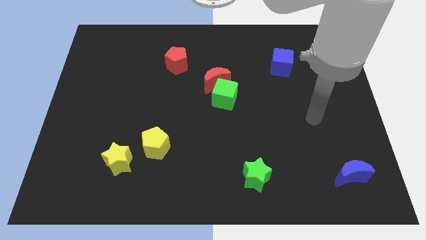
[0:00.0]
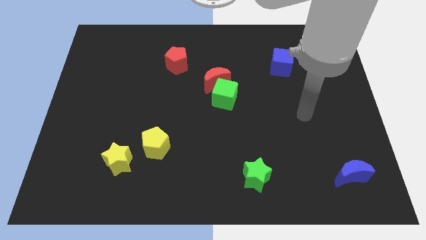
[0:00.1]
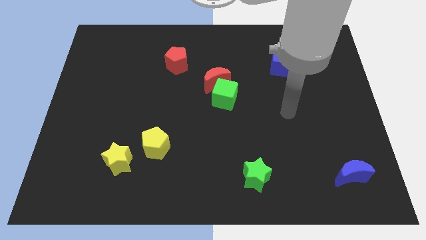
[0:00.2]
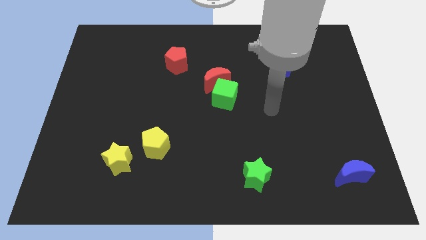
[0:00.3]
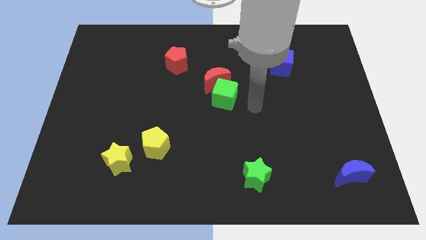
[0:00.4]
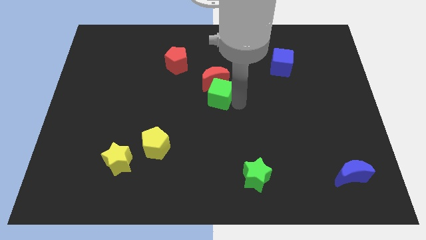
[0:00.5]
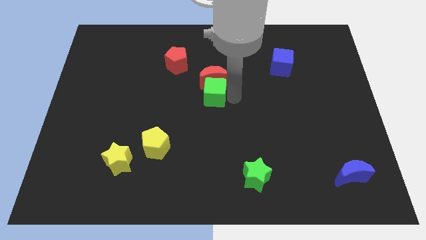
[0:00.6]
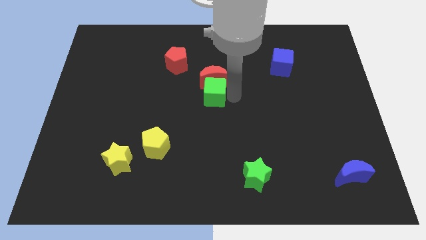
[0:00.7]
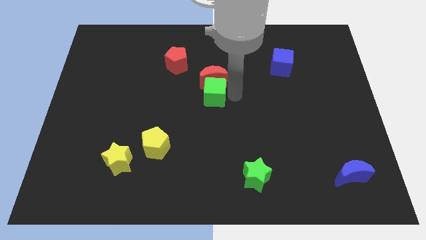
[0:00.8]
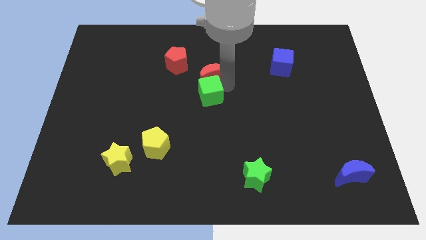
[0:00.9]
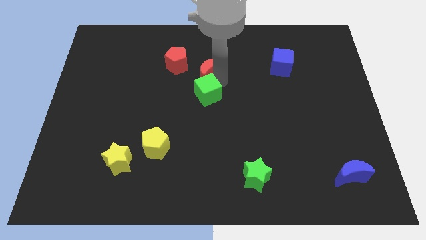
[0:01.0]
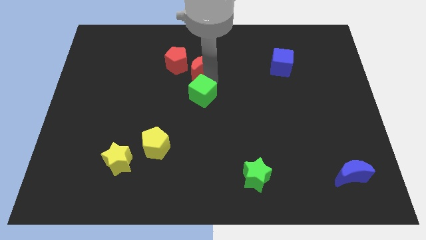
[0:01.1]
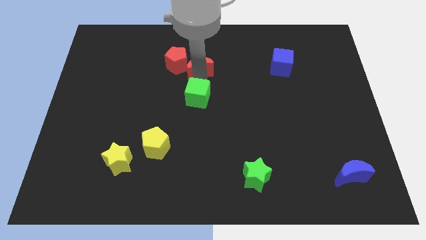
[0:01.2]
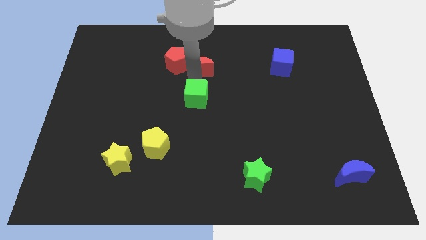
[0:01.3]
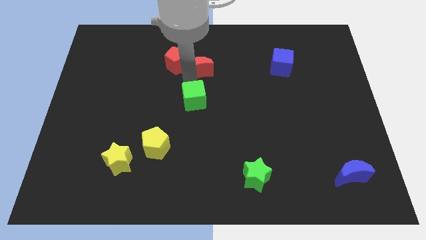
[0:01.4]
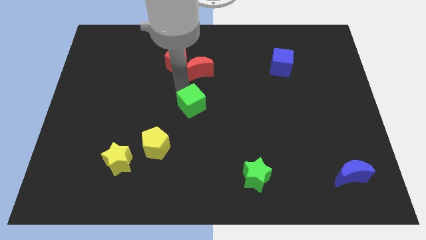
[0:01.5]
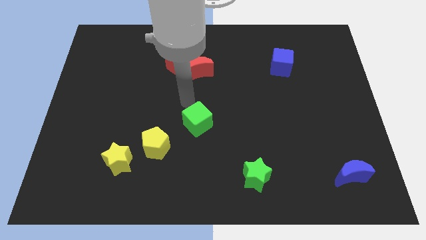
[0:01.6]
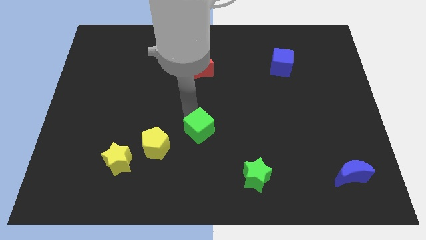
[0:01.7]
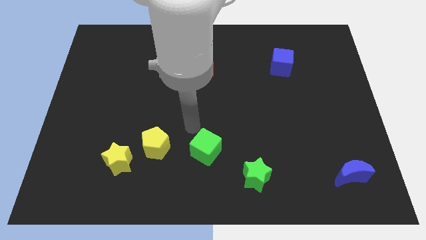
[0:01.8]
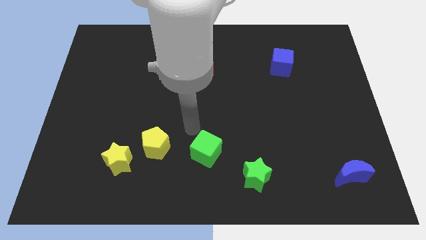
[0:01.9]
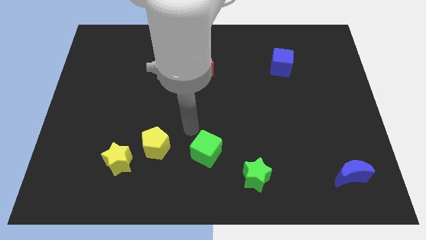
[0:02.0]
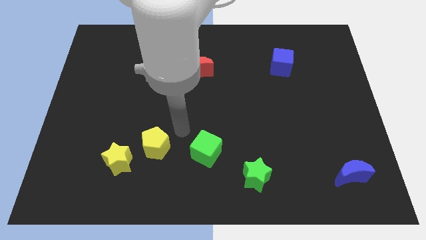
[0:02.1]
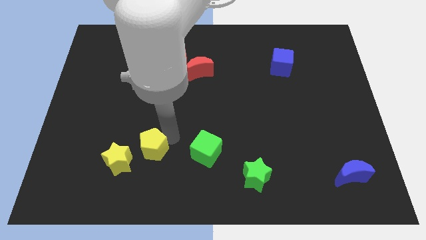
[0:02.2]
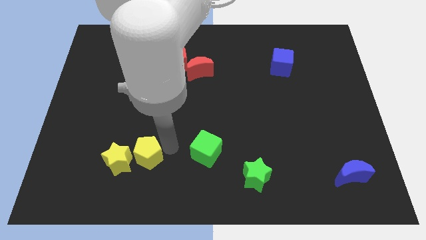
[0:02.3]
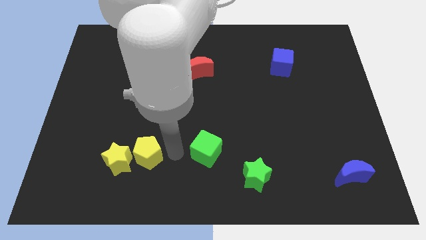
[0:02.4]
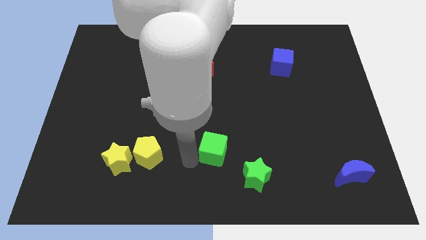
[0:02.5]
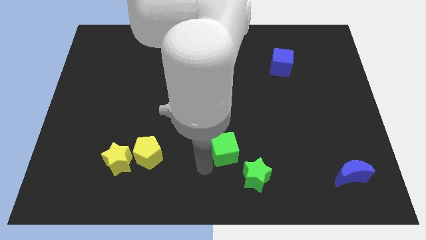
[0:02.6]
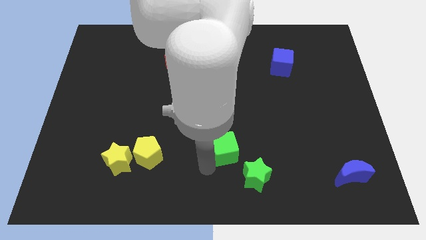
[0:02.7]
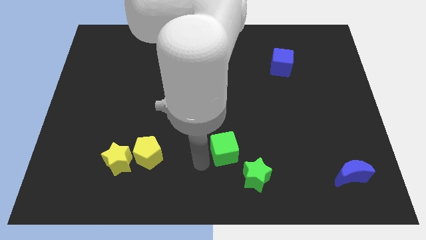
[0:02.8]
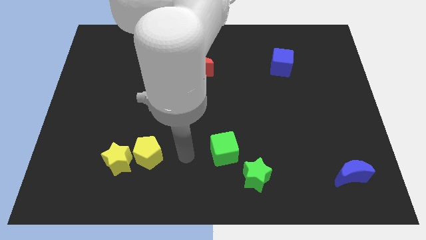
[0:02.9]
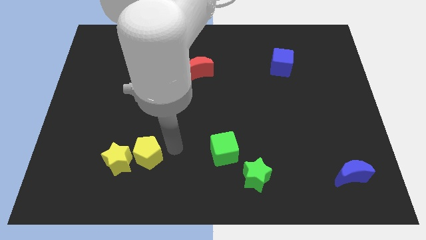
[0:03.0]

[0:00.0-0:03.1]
put the green cube at the top left side of the green star

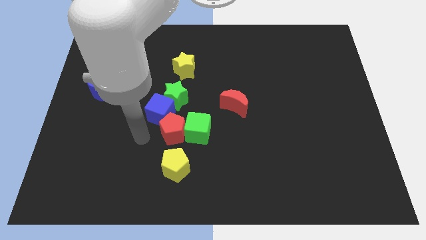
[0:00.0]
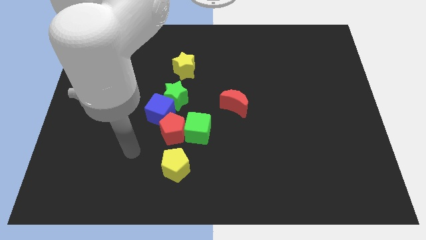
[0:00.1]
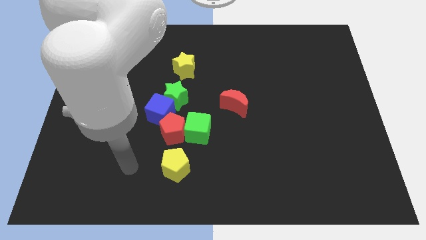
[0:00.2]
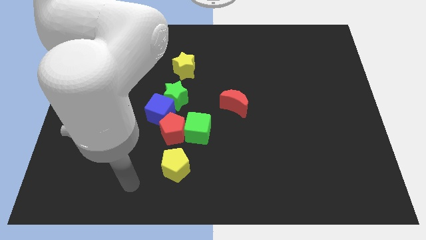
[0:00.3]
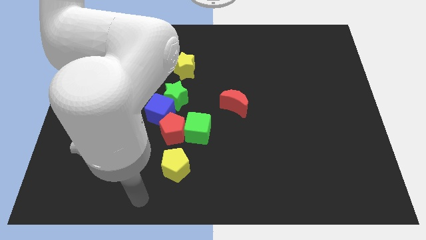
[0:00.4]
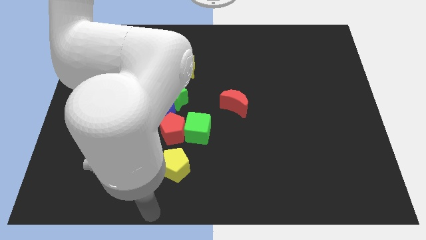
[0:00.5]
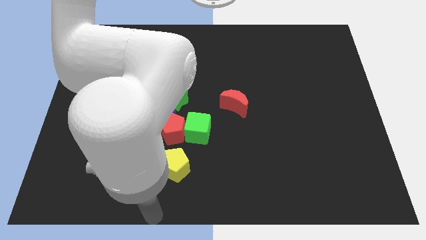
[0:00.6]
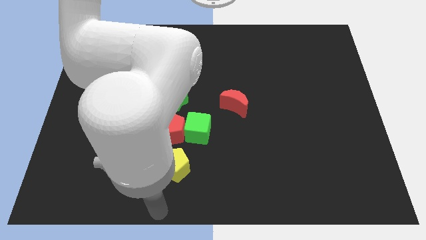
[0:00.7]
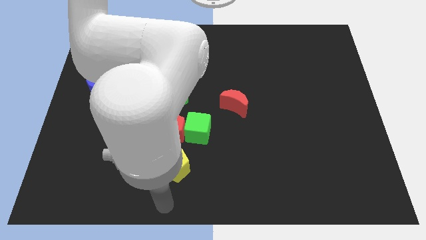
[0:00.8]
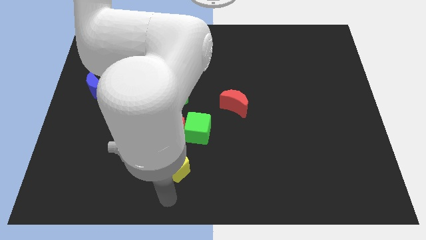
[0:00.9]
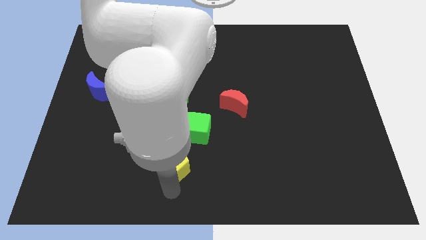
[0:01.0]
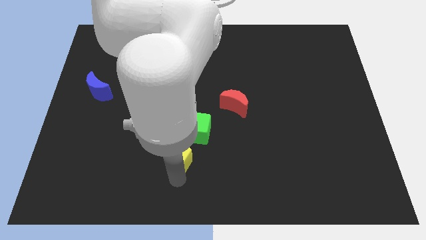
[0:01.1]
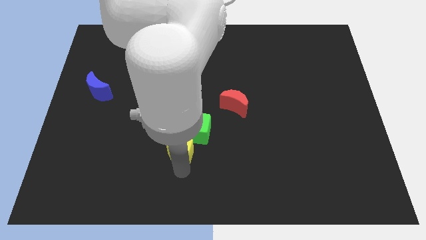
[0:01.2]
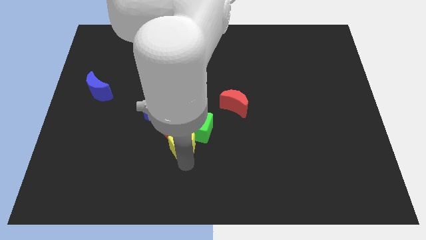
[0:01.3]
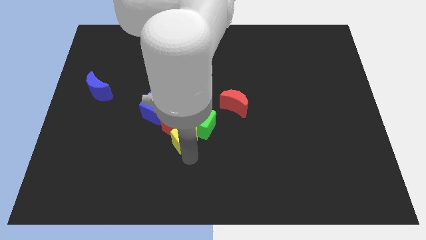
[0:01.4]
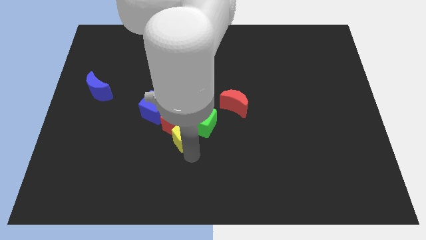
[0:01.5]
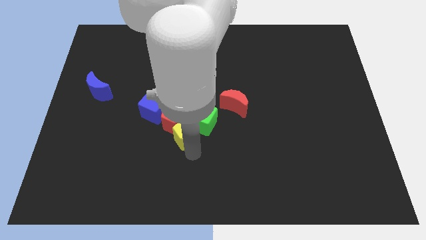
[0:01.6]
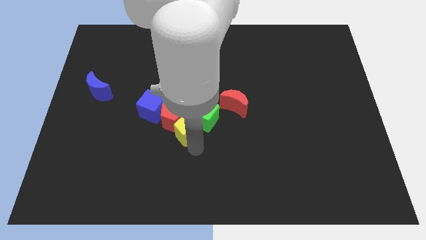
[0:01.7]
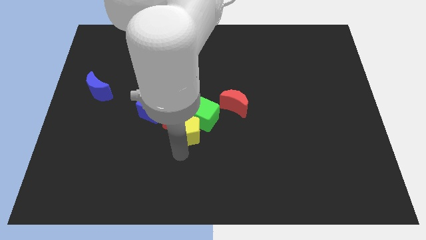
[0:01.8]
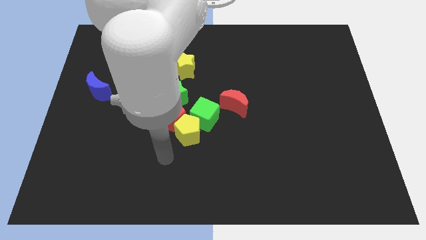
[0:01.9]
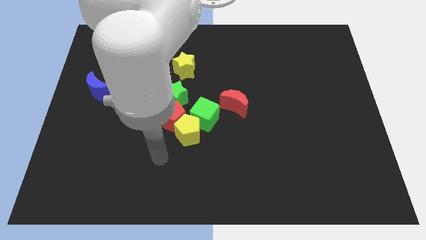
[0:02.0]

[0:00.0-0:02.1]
put the yellow pentagon into the red pentagon

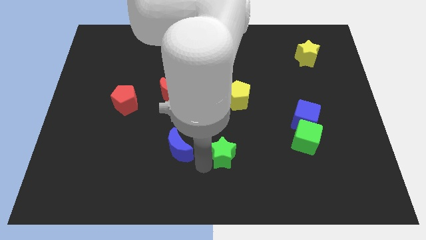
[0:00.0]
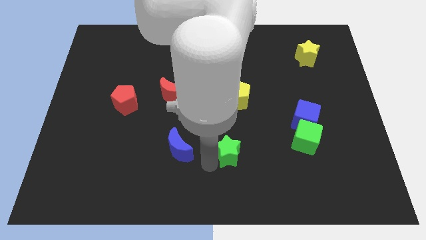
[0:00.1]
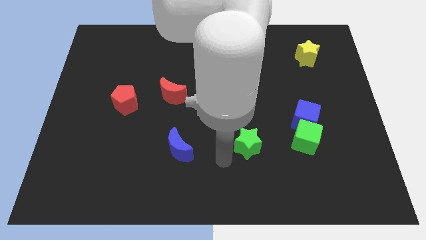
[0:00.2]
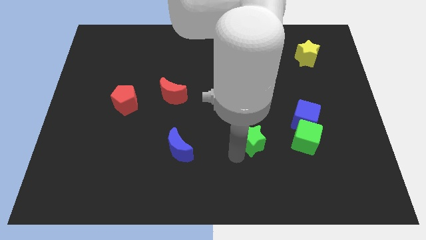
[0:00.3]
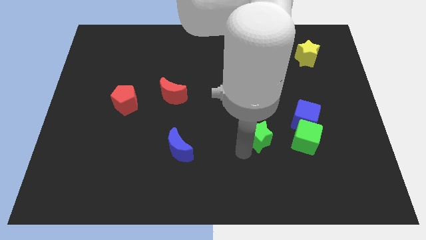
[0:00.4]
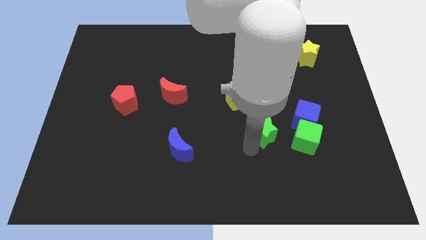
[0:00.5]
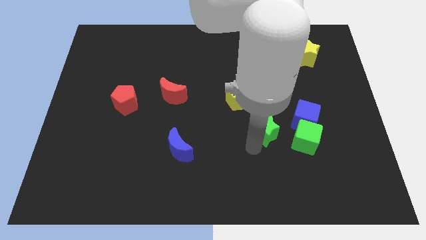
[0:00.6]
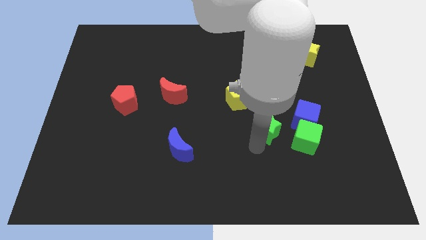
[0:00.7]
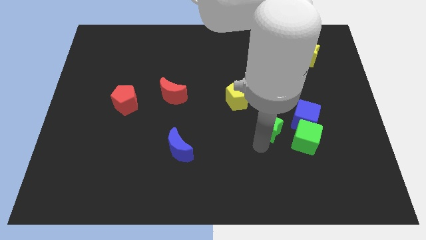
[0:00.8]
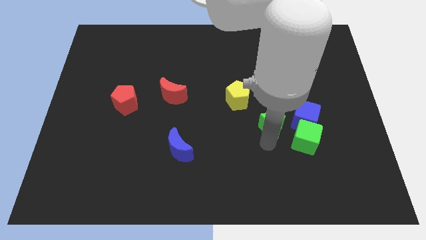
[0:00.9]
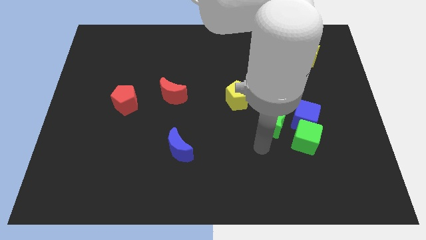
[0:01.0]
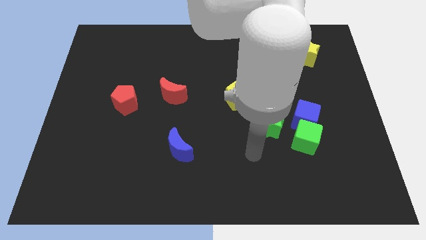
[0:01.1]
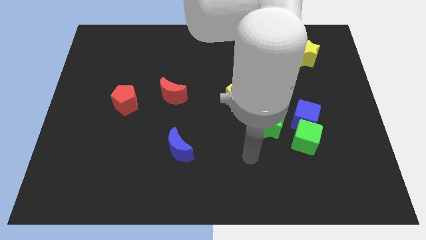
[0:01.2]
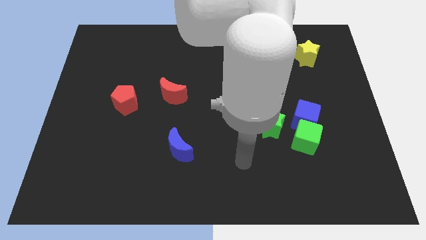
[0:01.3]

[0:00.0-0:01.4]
put the green star to the left of green cube

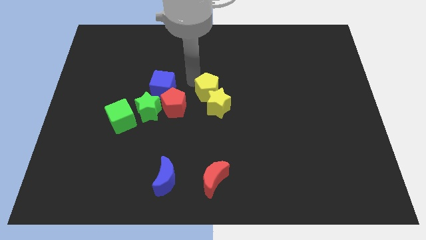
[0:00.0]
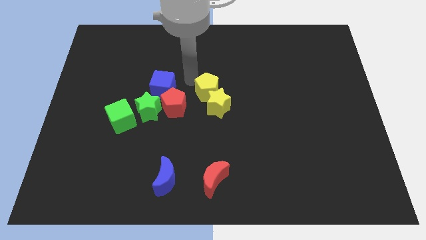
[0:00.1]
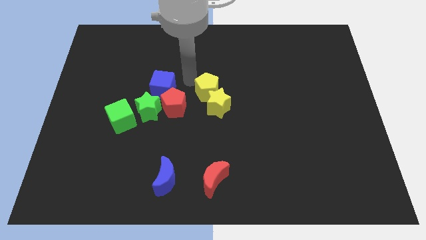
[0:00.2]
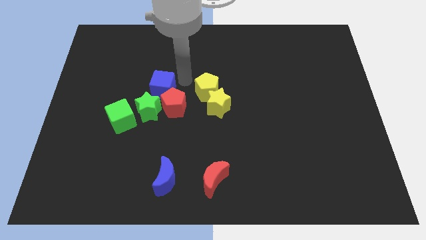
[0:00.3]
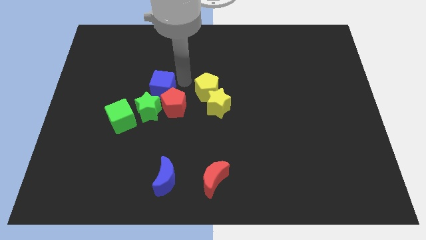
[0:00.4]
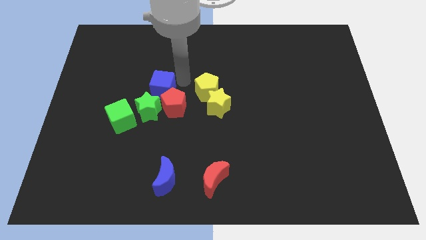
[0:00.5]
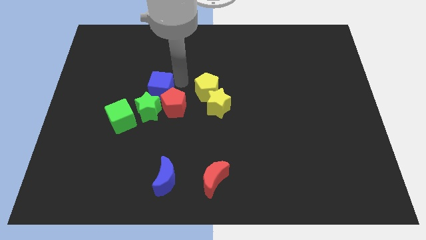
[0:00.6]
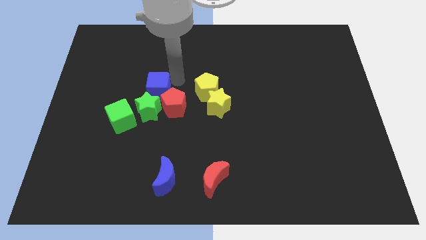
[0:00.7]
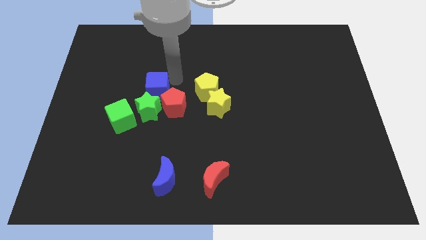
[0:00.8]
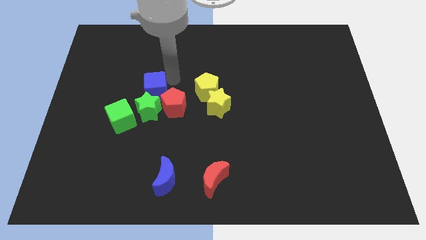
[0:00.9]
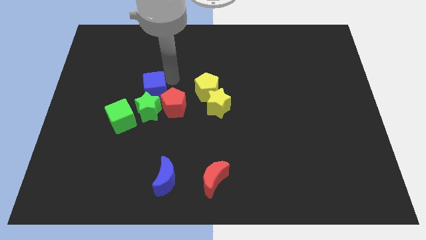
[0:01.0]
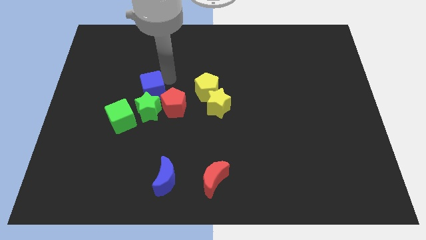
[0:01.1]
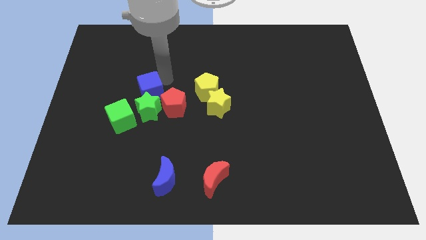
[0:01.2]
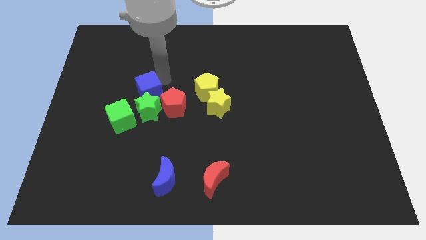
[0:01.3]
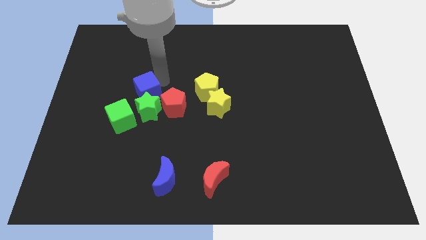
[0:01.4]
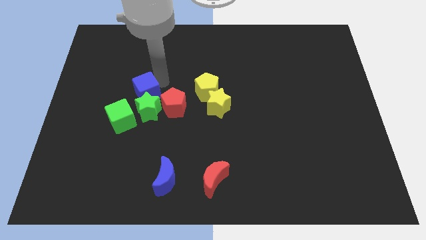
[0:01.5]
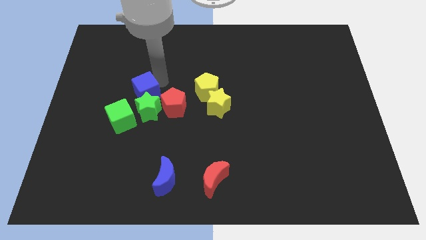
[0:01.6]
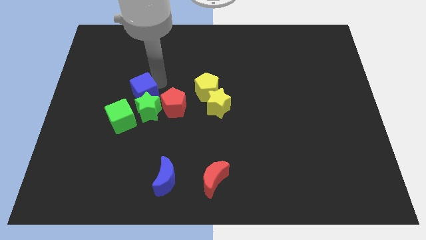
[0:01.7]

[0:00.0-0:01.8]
place the blue cube to the top of the green star

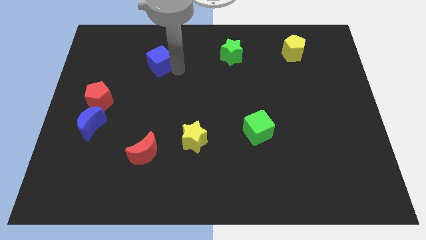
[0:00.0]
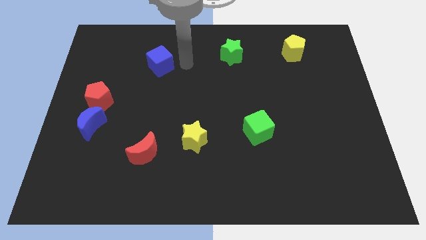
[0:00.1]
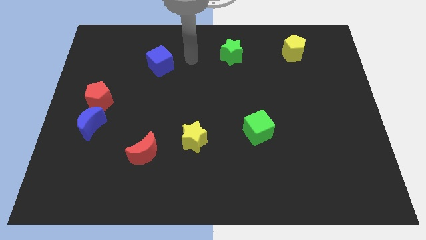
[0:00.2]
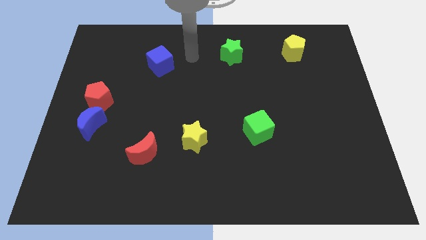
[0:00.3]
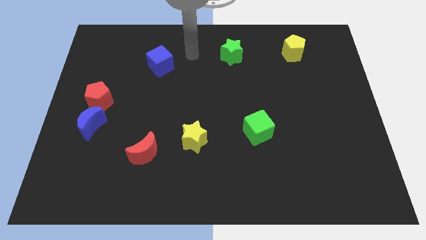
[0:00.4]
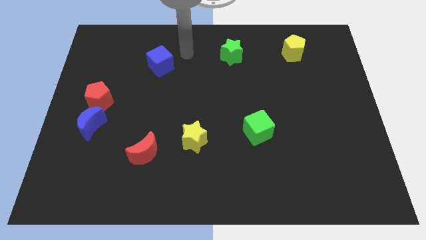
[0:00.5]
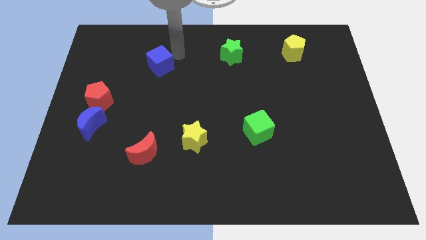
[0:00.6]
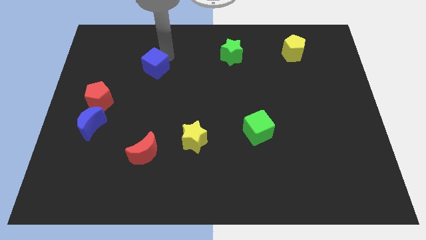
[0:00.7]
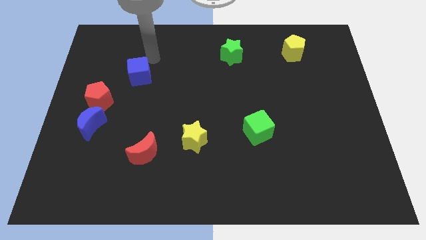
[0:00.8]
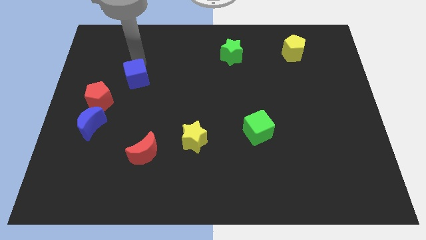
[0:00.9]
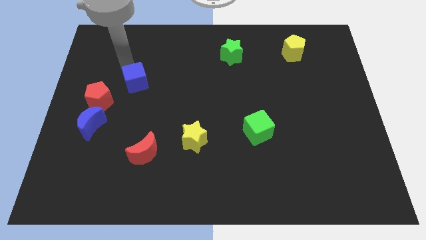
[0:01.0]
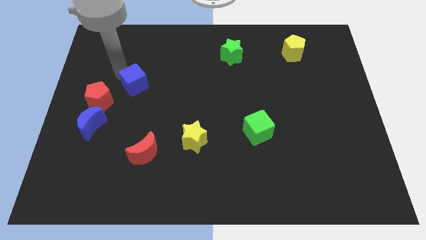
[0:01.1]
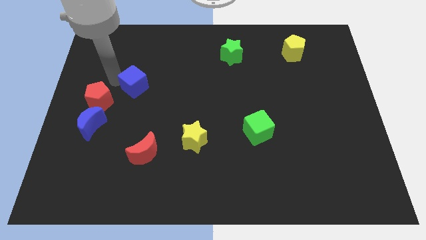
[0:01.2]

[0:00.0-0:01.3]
drag the blue cube towards the top right side of the red pentagon
